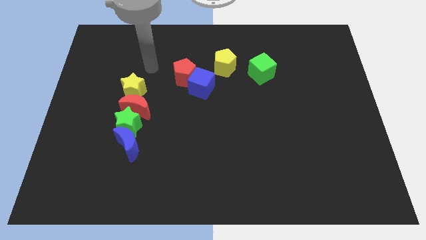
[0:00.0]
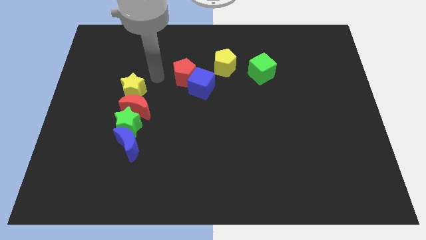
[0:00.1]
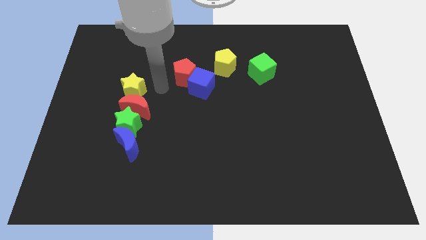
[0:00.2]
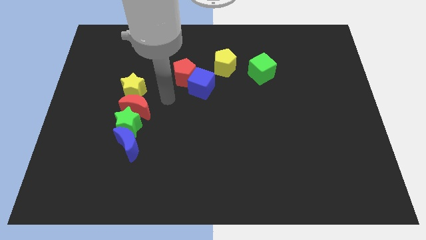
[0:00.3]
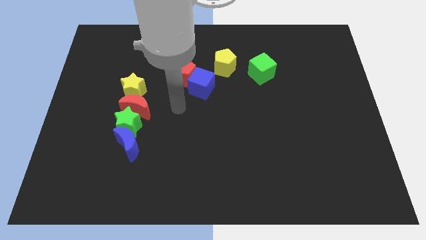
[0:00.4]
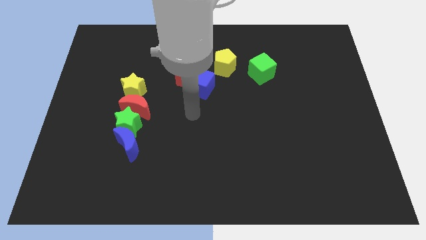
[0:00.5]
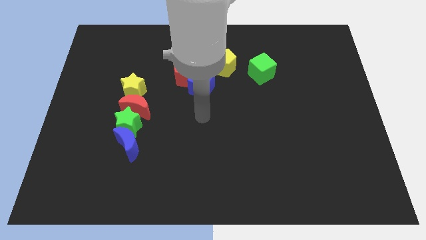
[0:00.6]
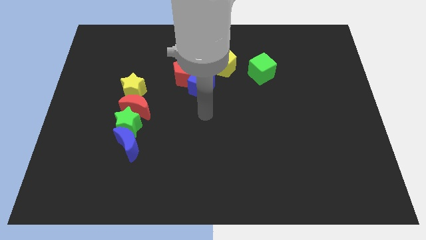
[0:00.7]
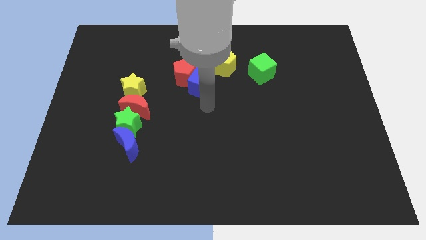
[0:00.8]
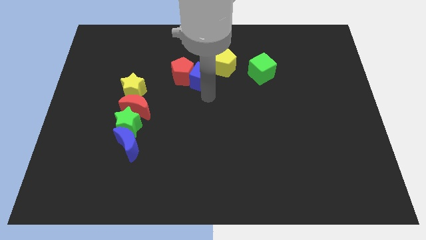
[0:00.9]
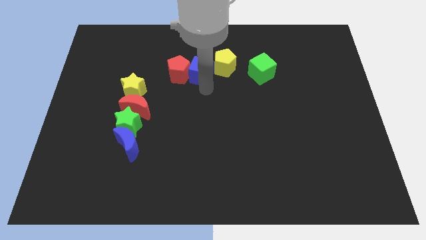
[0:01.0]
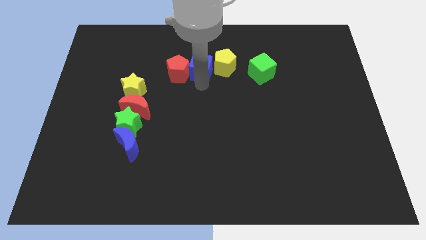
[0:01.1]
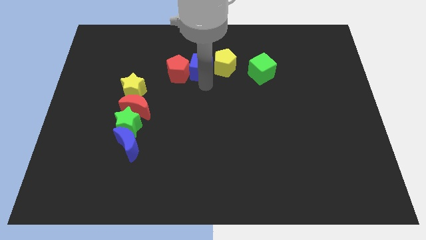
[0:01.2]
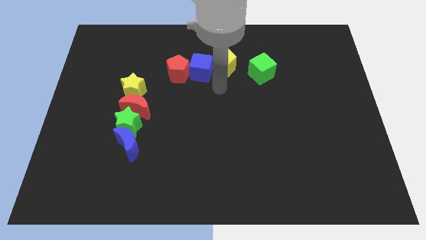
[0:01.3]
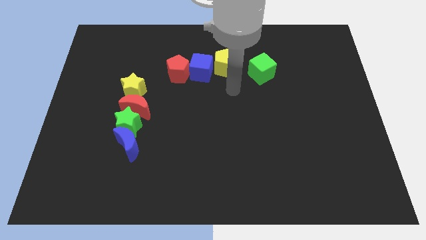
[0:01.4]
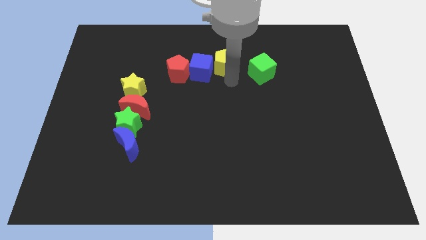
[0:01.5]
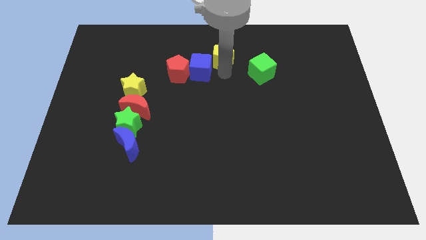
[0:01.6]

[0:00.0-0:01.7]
place the blue moon to the right of the red pentagon

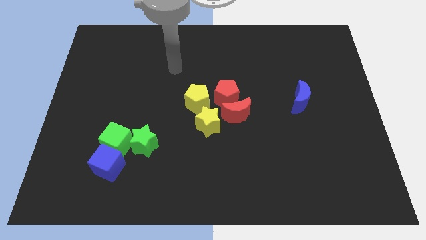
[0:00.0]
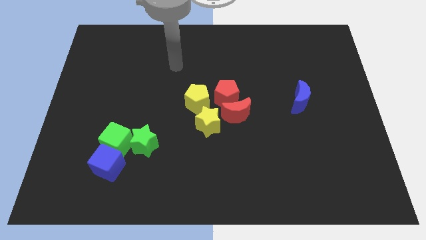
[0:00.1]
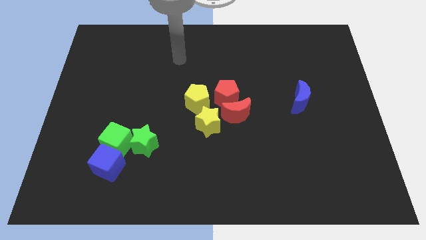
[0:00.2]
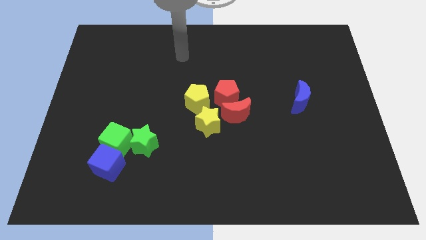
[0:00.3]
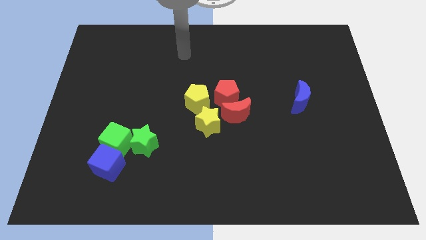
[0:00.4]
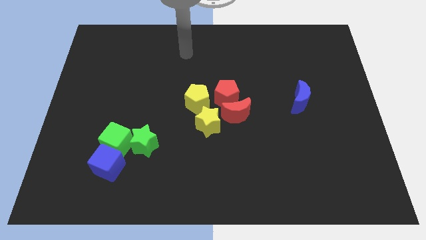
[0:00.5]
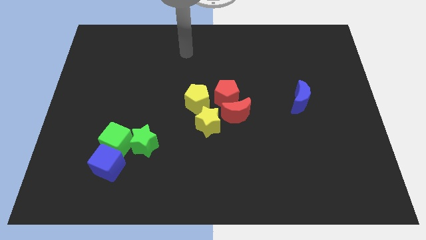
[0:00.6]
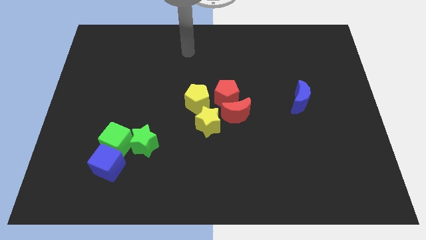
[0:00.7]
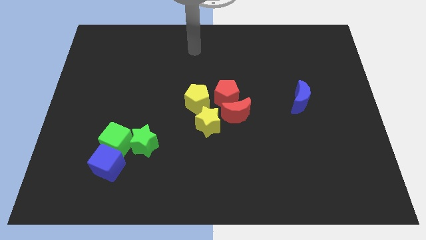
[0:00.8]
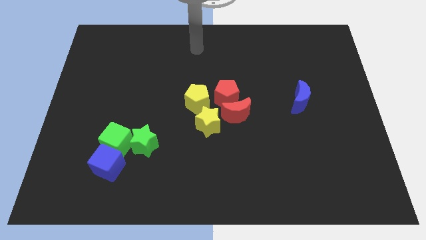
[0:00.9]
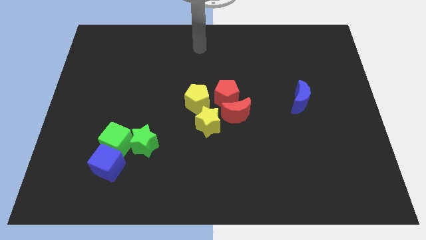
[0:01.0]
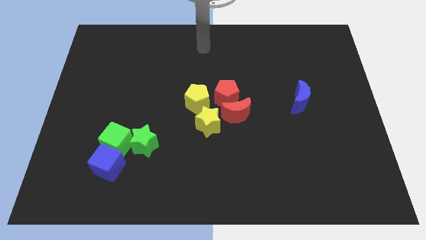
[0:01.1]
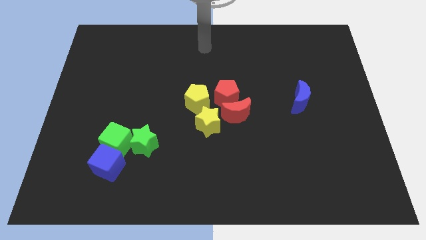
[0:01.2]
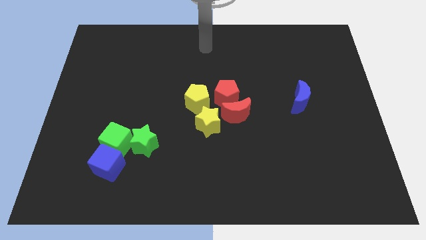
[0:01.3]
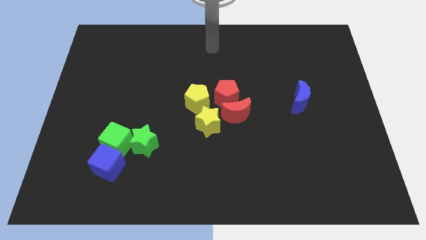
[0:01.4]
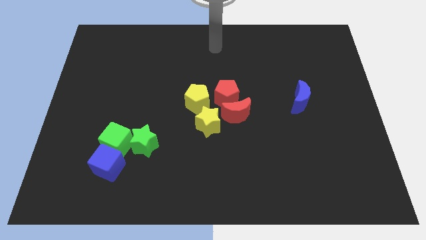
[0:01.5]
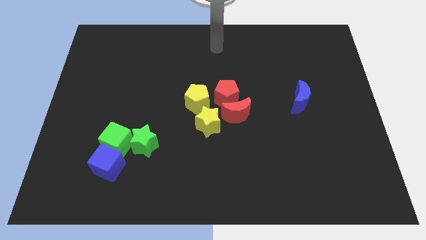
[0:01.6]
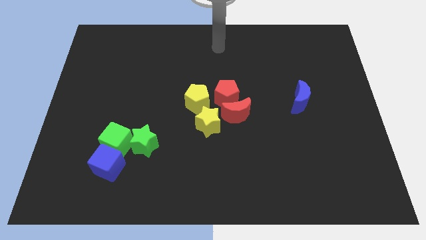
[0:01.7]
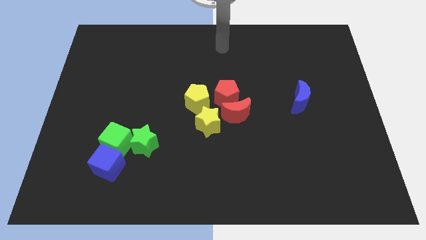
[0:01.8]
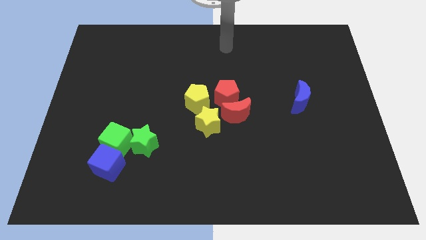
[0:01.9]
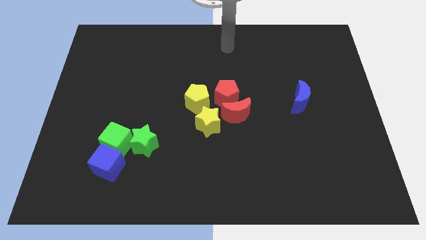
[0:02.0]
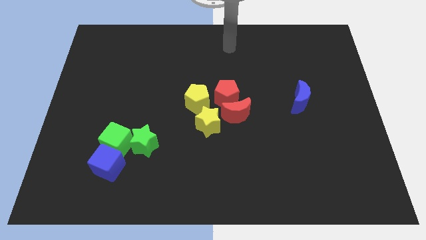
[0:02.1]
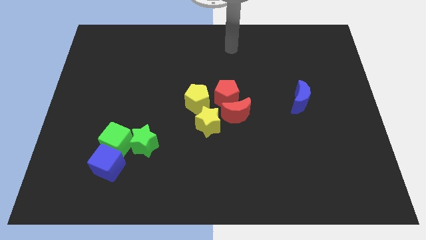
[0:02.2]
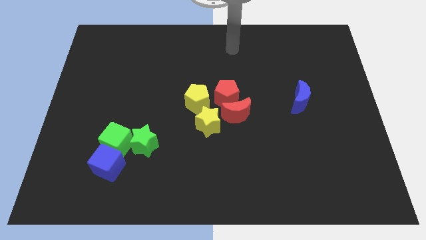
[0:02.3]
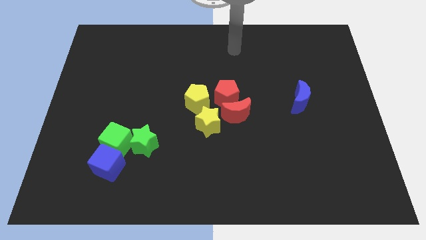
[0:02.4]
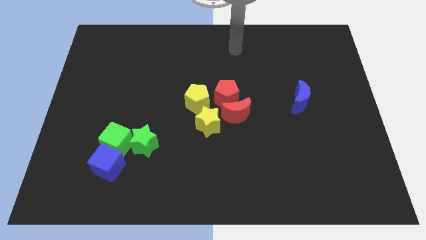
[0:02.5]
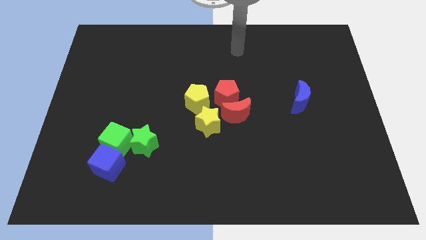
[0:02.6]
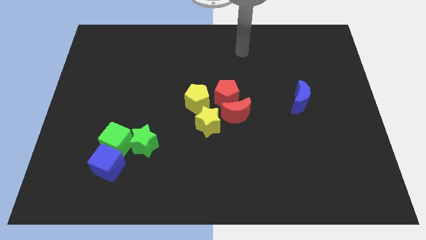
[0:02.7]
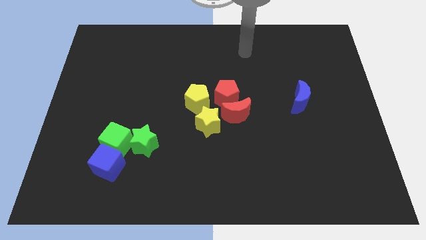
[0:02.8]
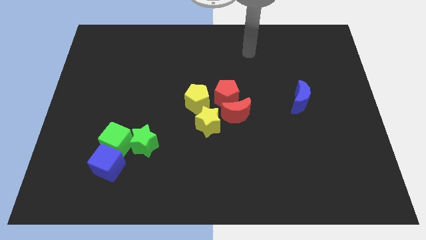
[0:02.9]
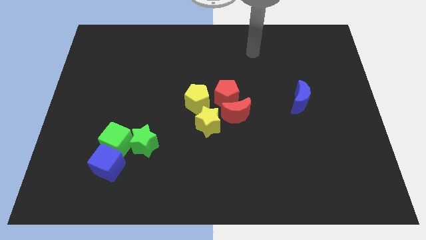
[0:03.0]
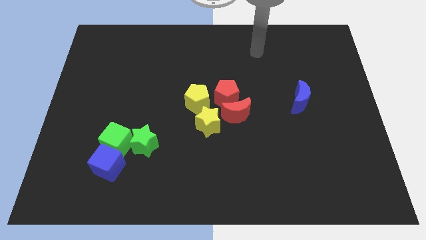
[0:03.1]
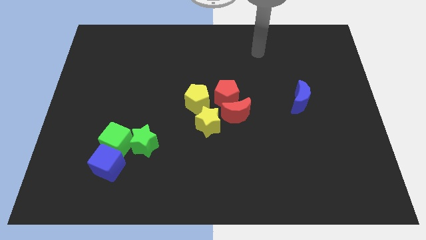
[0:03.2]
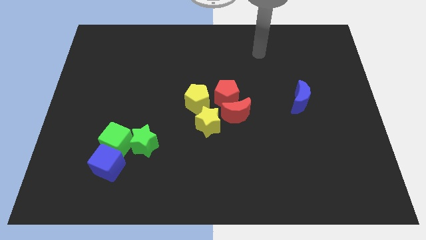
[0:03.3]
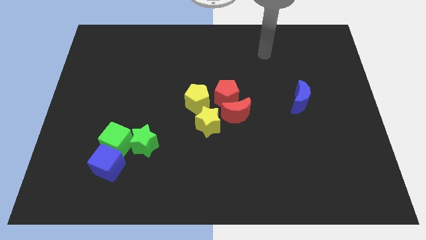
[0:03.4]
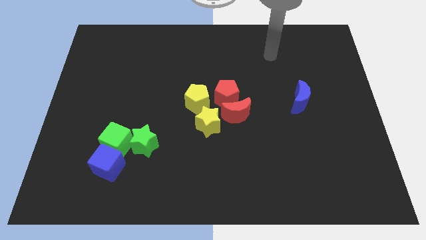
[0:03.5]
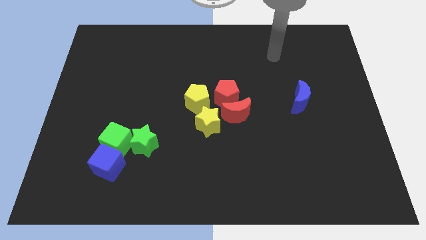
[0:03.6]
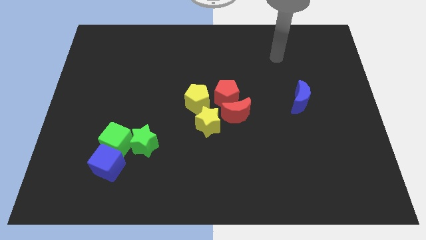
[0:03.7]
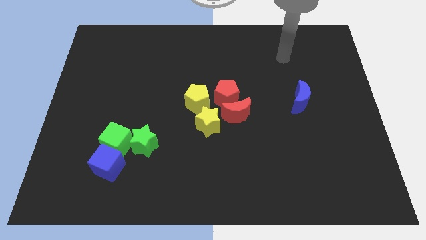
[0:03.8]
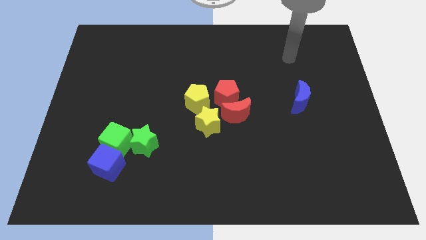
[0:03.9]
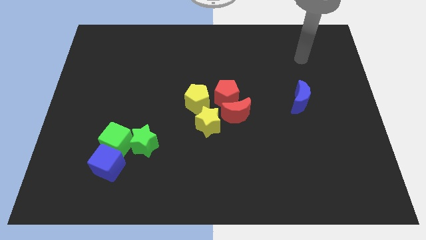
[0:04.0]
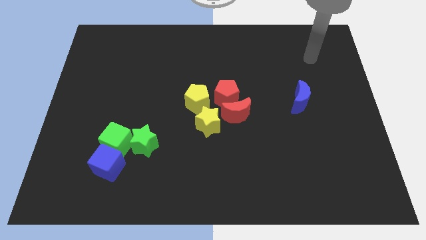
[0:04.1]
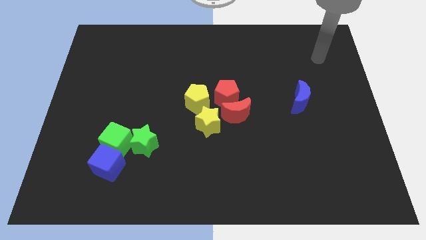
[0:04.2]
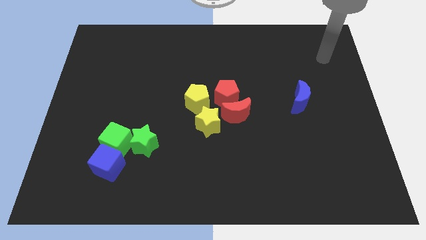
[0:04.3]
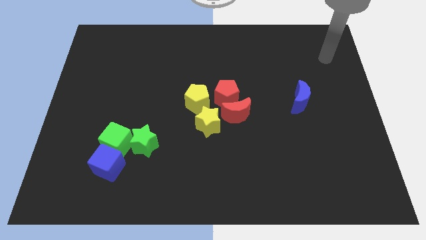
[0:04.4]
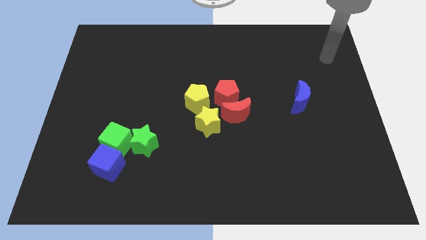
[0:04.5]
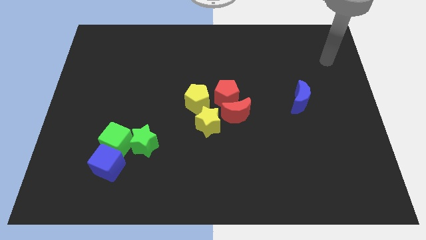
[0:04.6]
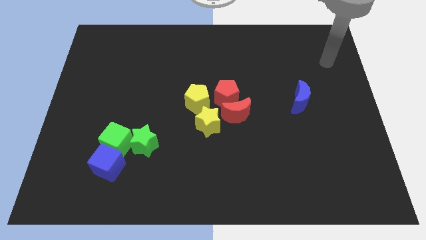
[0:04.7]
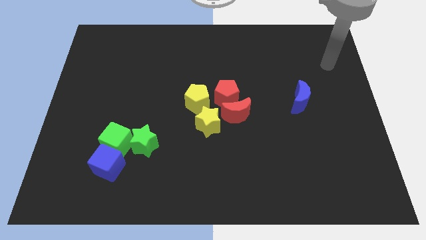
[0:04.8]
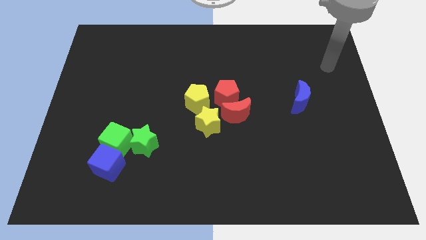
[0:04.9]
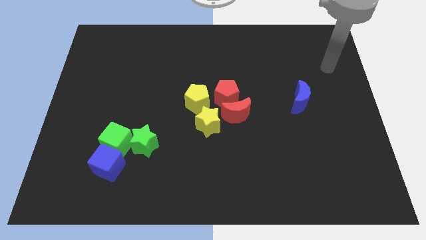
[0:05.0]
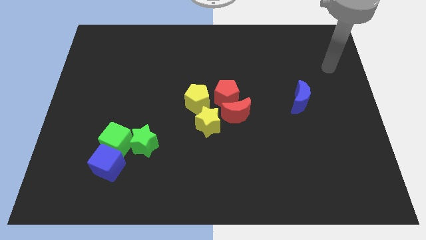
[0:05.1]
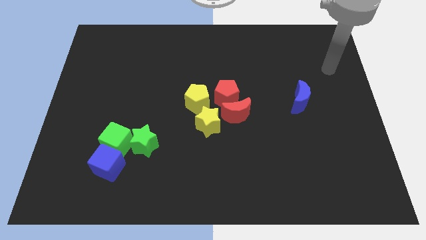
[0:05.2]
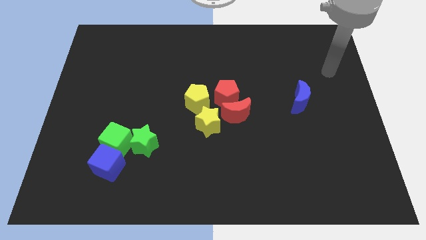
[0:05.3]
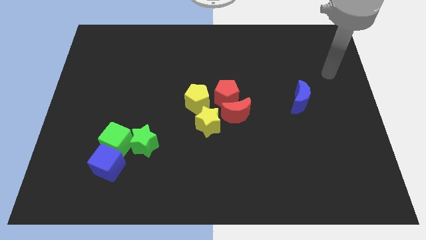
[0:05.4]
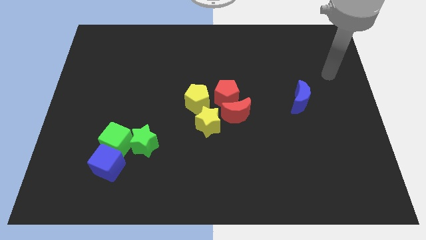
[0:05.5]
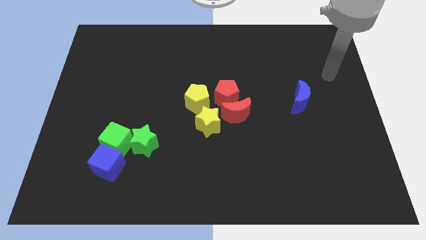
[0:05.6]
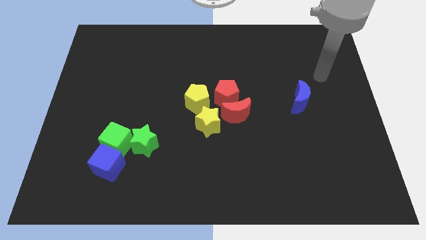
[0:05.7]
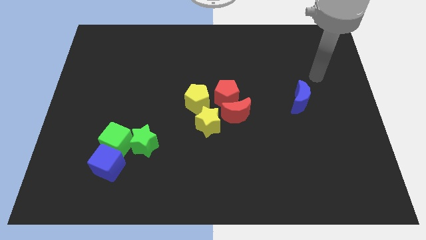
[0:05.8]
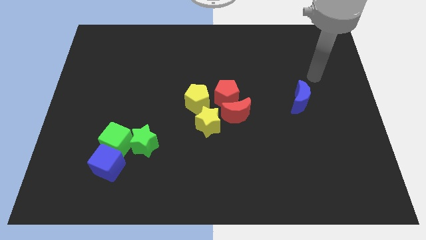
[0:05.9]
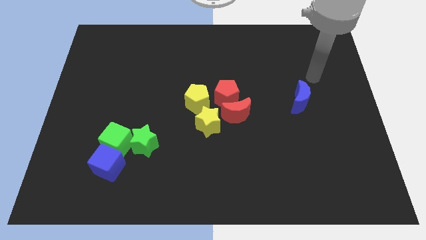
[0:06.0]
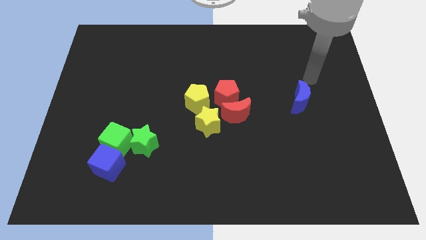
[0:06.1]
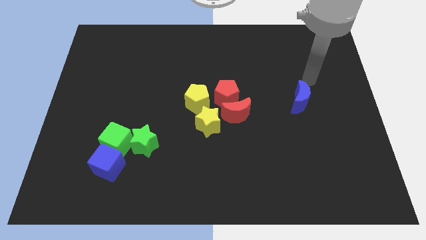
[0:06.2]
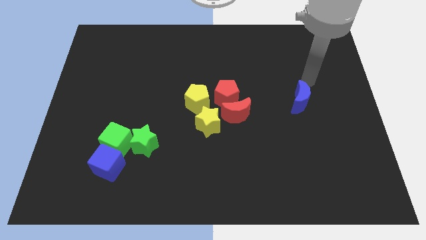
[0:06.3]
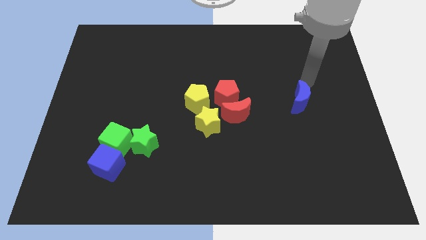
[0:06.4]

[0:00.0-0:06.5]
point your arm at the top of the blue crescent

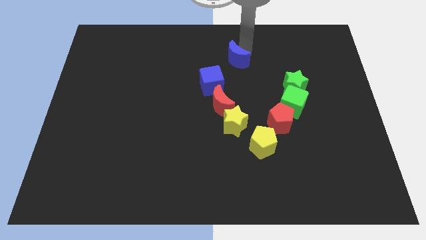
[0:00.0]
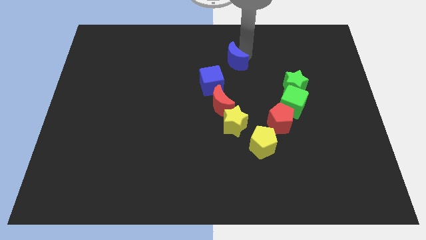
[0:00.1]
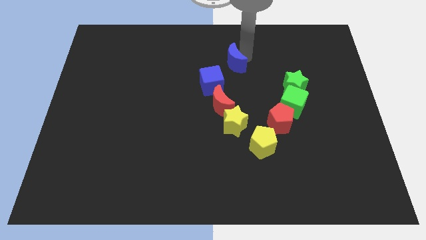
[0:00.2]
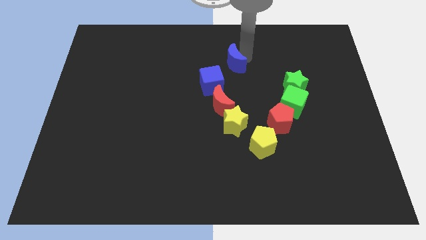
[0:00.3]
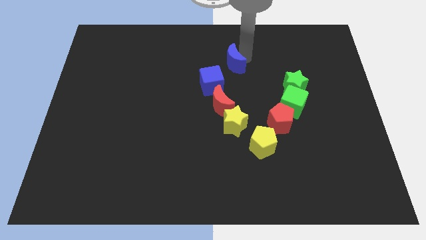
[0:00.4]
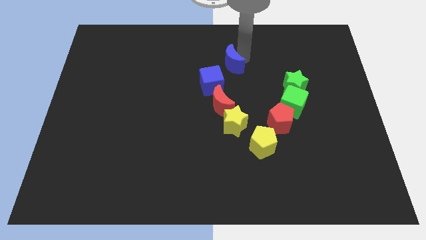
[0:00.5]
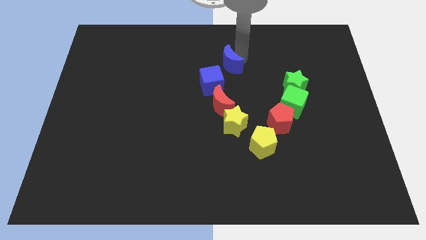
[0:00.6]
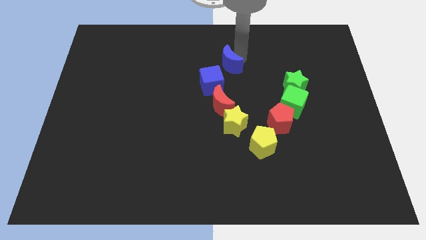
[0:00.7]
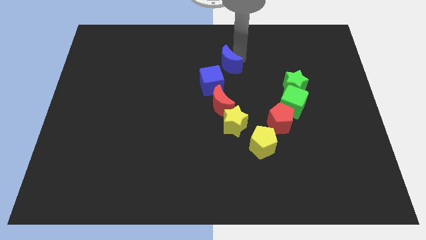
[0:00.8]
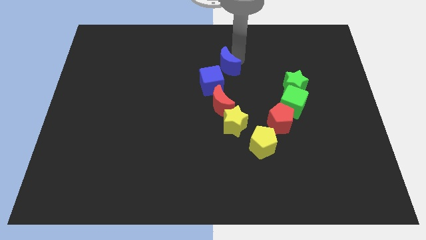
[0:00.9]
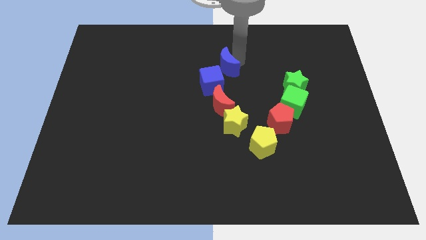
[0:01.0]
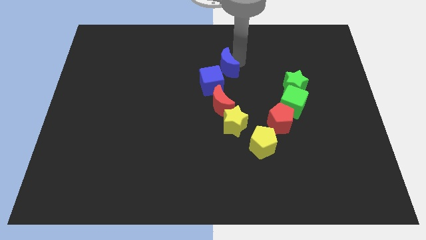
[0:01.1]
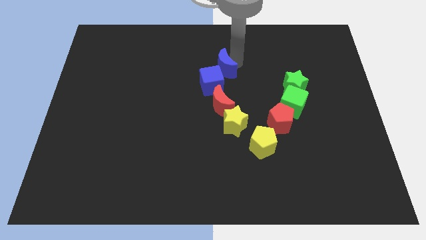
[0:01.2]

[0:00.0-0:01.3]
push the blue crescent to the top right of the blue cube
